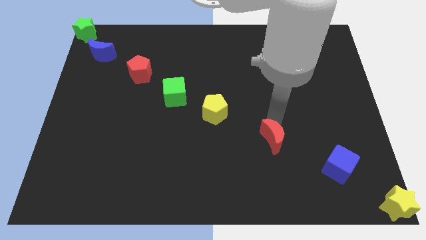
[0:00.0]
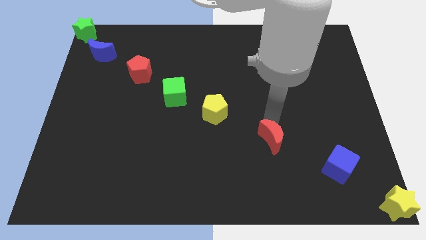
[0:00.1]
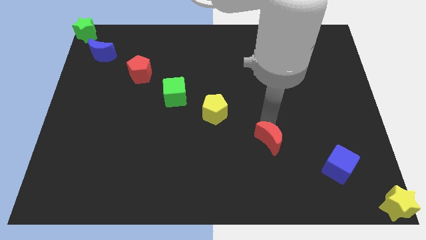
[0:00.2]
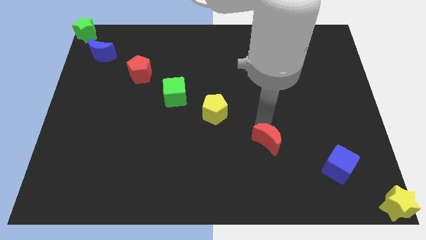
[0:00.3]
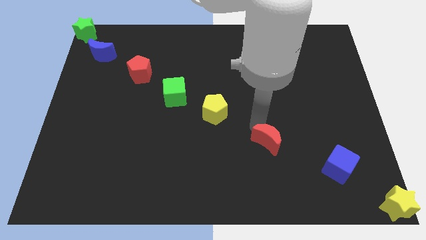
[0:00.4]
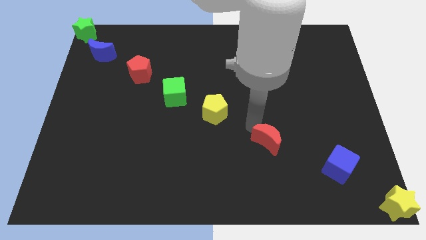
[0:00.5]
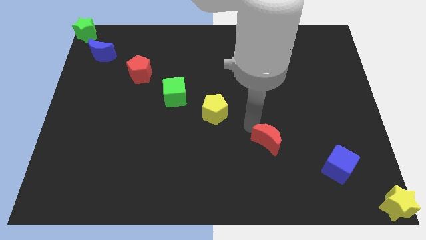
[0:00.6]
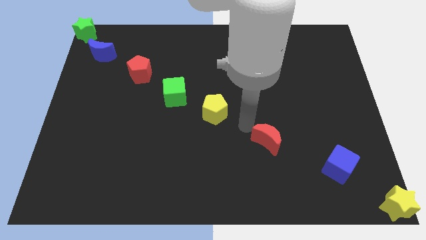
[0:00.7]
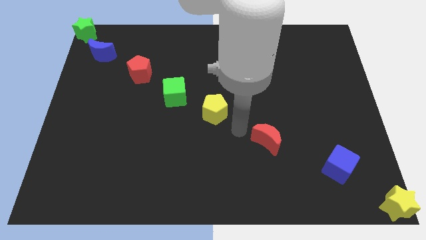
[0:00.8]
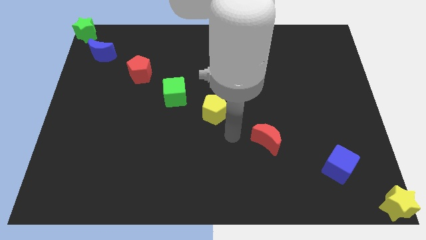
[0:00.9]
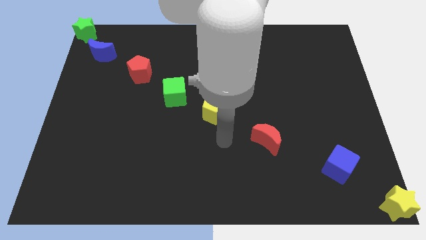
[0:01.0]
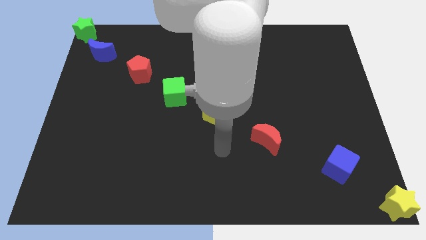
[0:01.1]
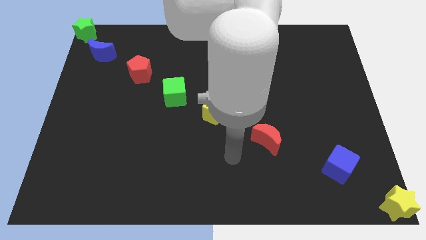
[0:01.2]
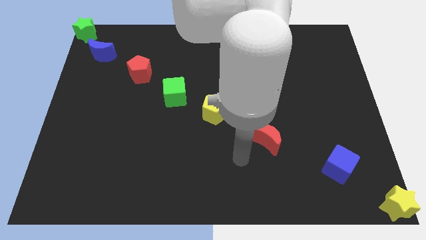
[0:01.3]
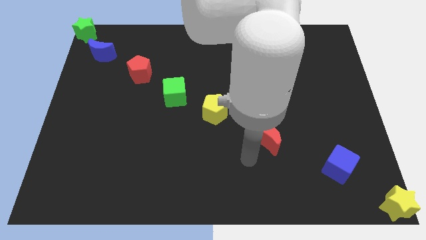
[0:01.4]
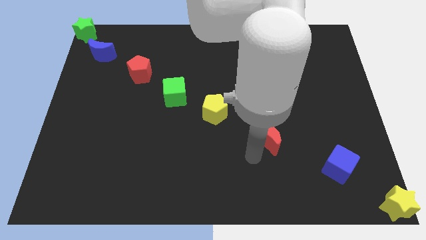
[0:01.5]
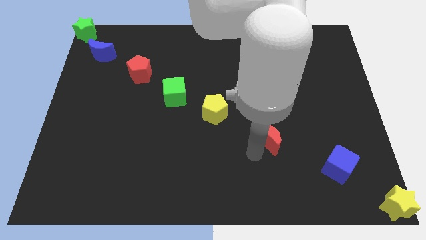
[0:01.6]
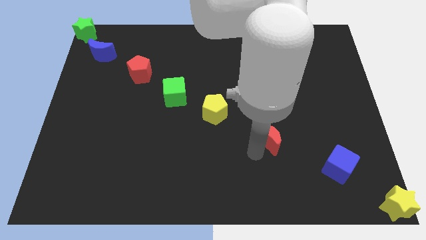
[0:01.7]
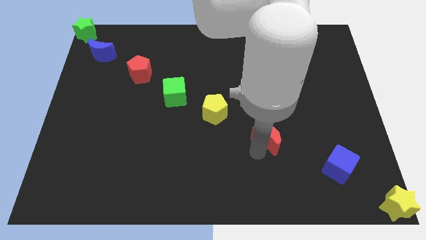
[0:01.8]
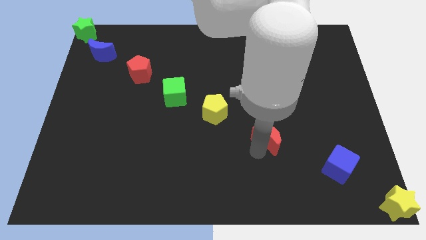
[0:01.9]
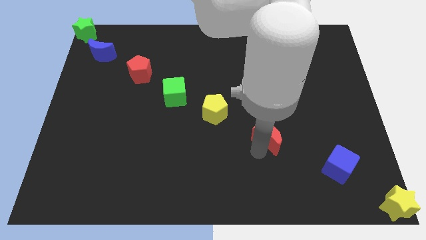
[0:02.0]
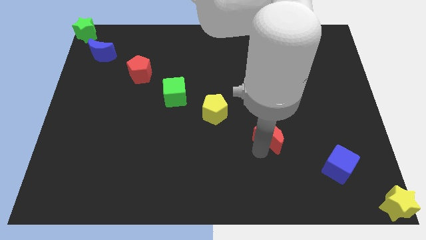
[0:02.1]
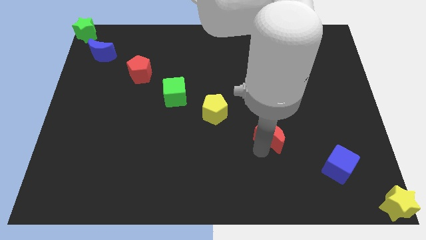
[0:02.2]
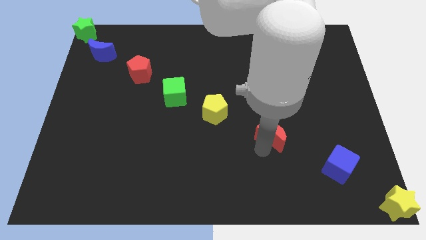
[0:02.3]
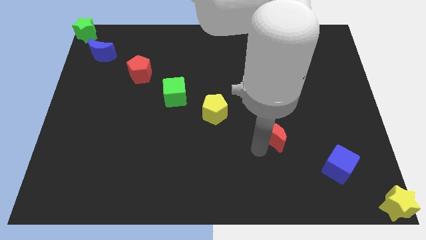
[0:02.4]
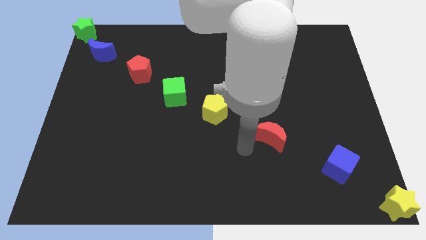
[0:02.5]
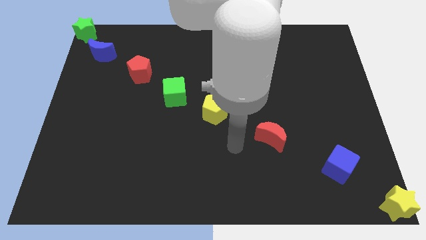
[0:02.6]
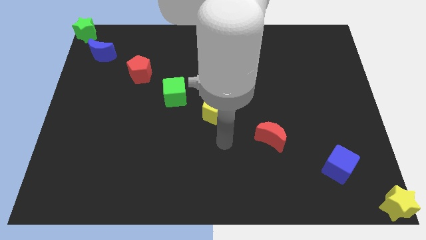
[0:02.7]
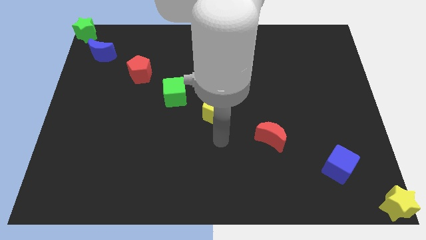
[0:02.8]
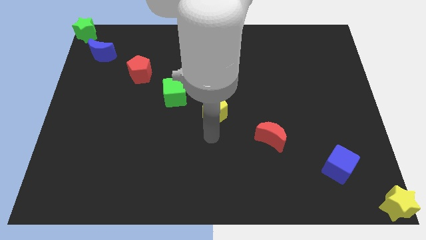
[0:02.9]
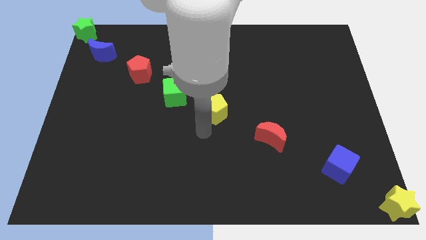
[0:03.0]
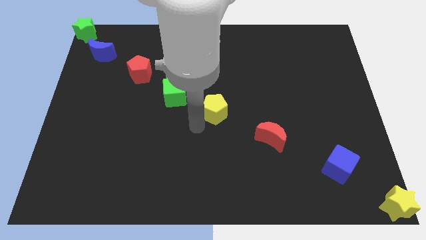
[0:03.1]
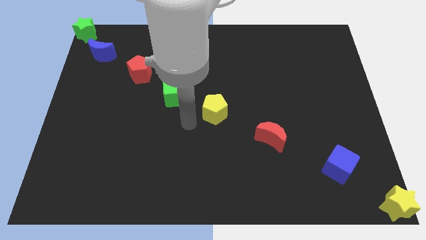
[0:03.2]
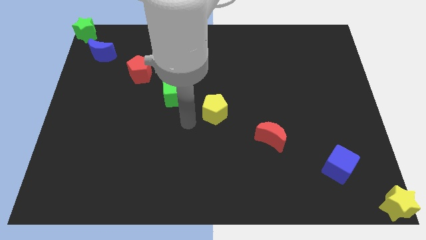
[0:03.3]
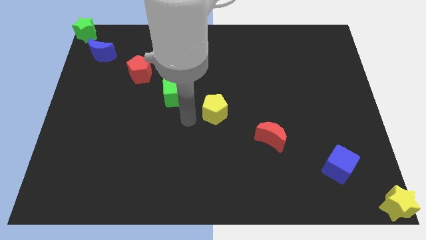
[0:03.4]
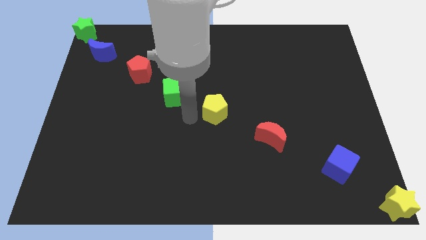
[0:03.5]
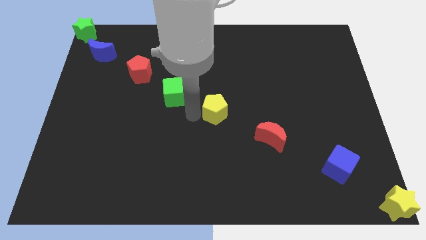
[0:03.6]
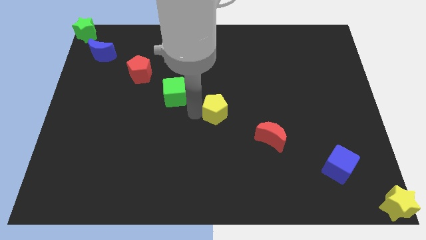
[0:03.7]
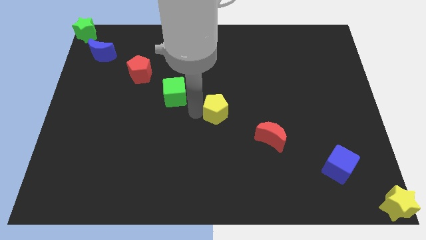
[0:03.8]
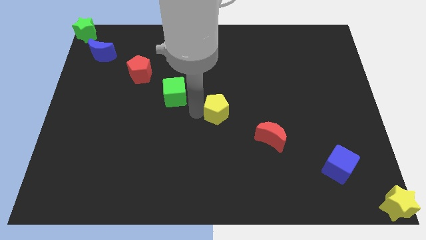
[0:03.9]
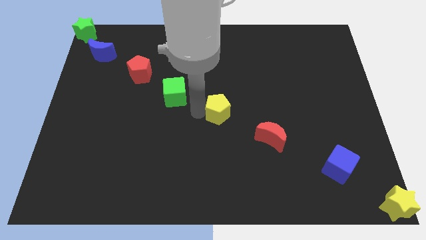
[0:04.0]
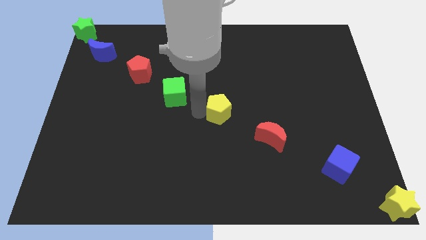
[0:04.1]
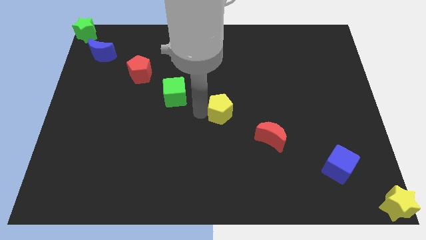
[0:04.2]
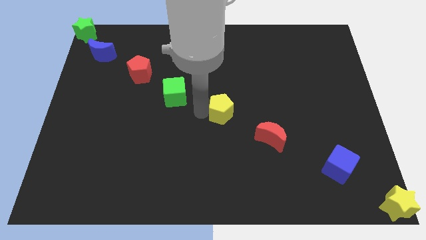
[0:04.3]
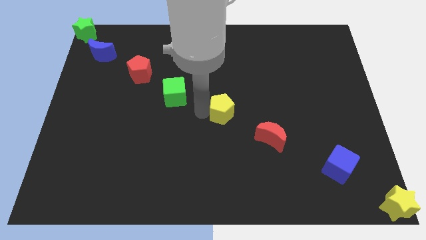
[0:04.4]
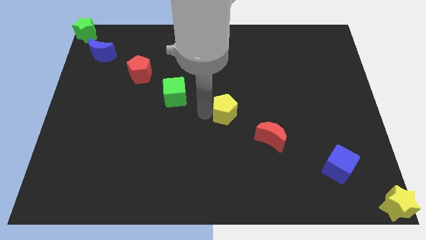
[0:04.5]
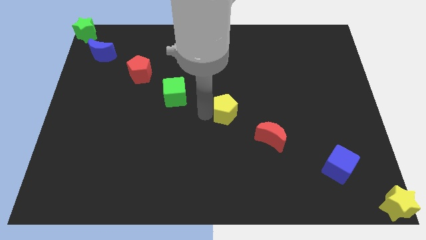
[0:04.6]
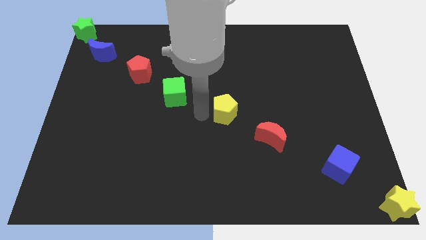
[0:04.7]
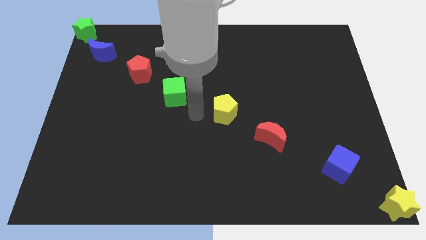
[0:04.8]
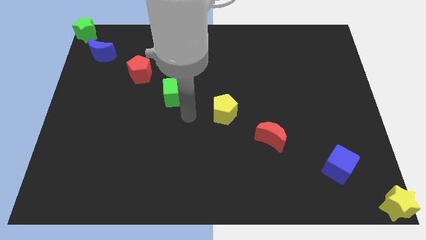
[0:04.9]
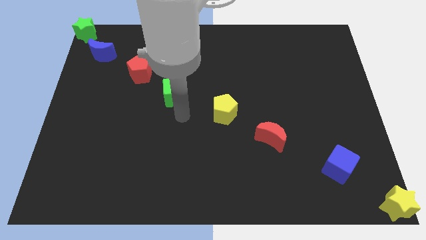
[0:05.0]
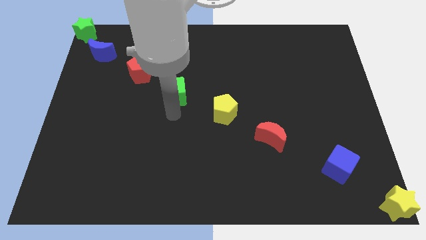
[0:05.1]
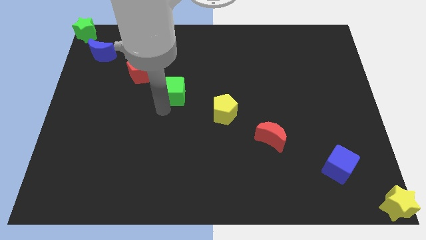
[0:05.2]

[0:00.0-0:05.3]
adjust the red crescent and the yellow pentagon in the diagonal line

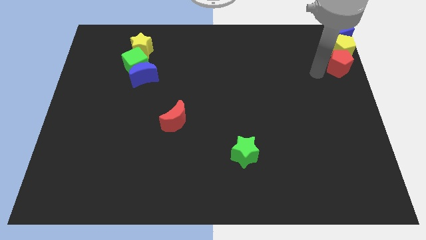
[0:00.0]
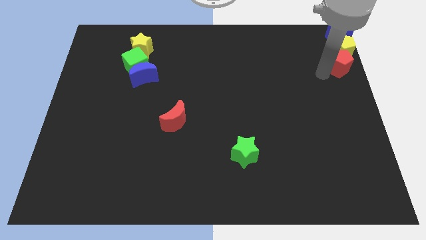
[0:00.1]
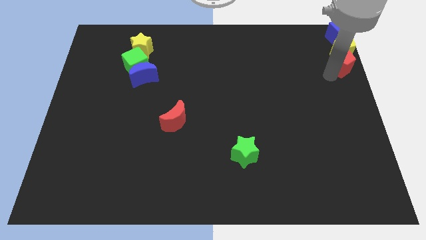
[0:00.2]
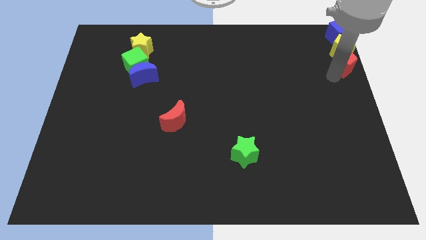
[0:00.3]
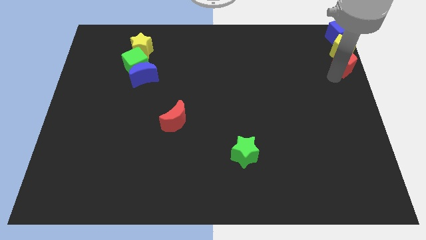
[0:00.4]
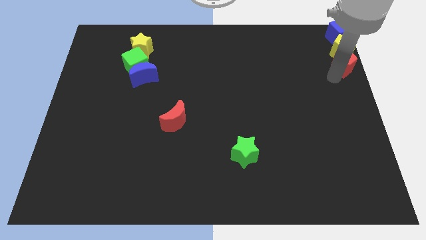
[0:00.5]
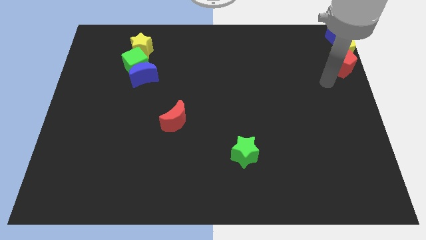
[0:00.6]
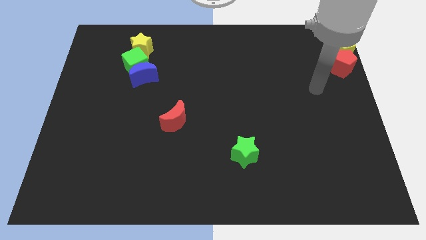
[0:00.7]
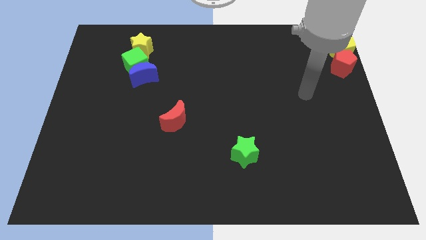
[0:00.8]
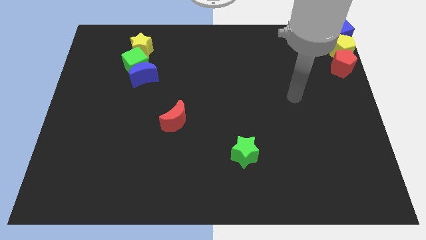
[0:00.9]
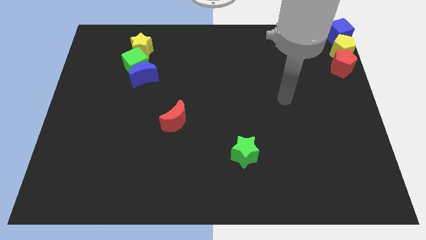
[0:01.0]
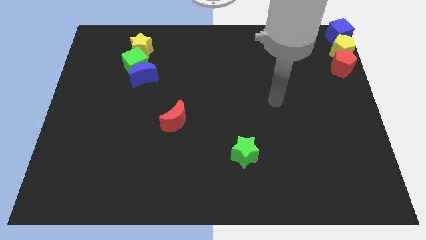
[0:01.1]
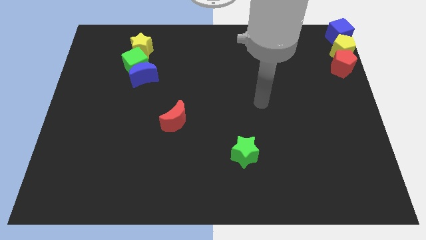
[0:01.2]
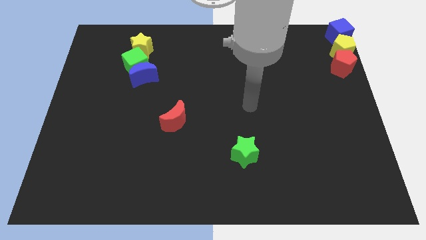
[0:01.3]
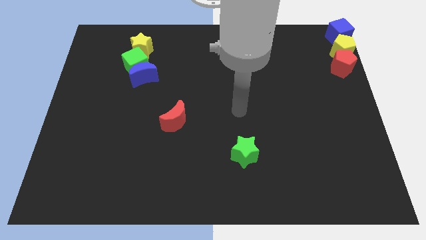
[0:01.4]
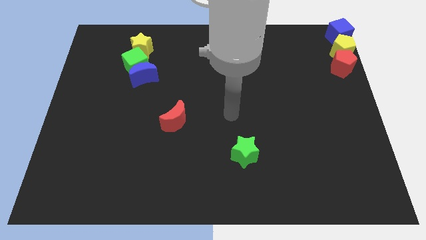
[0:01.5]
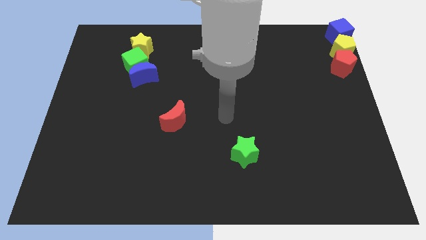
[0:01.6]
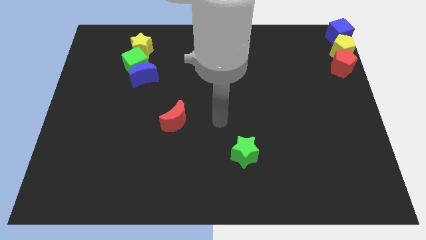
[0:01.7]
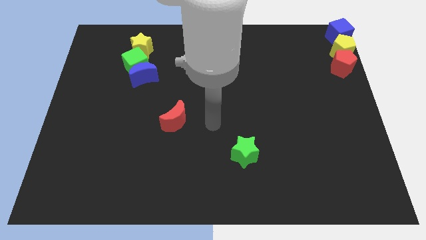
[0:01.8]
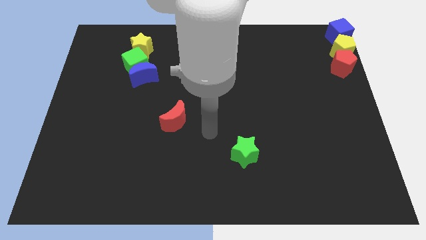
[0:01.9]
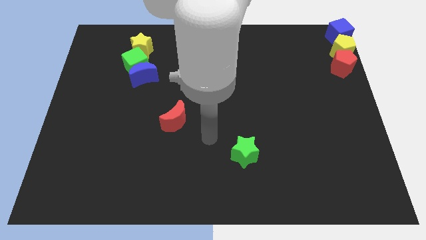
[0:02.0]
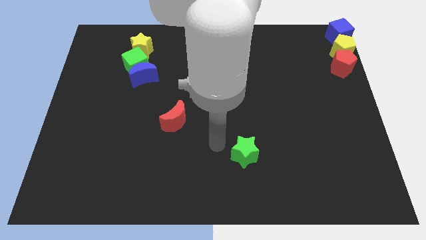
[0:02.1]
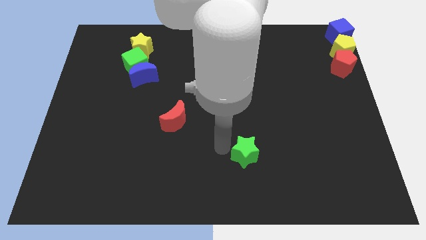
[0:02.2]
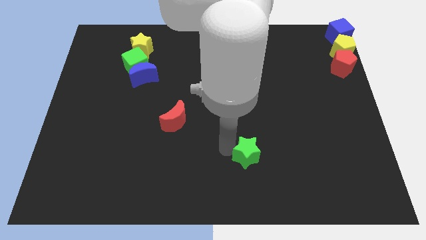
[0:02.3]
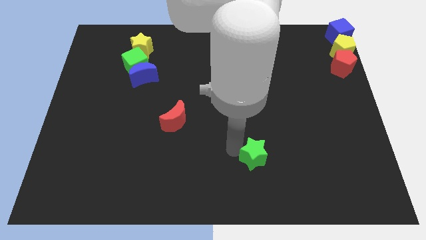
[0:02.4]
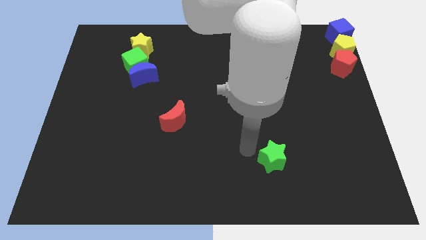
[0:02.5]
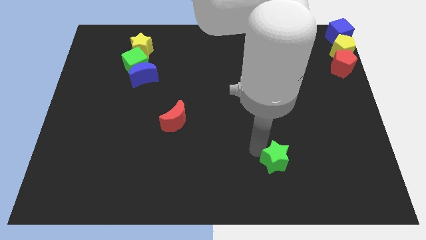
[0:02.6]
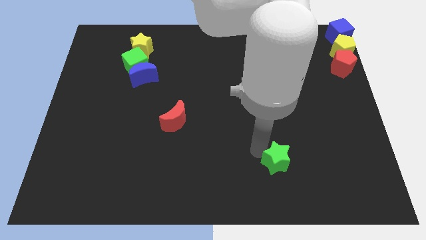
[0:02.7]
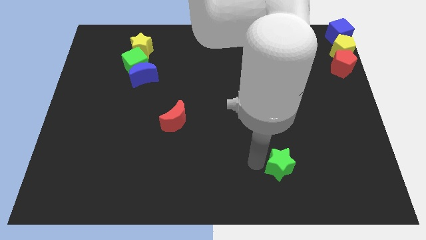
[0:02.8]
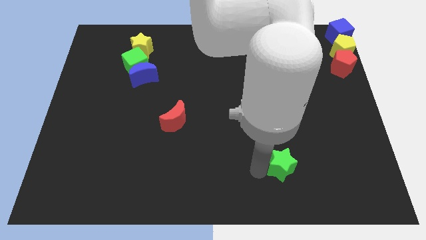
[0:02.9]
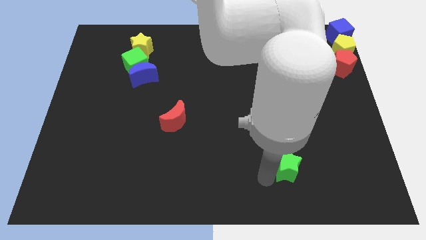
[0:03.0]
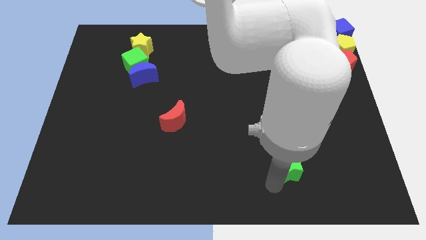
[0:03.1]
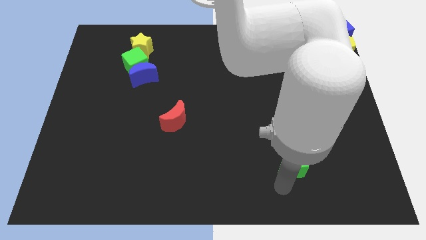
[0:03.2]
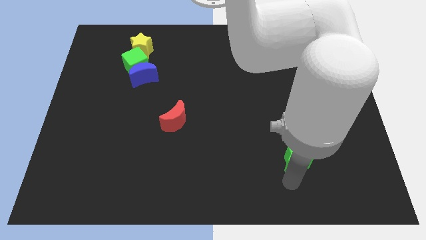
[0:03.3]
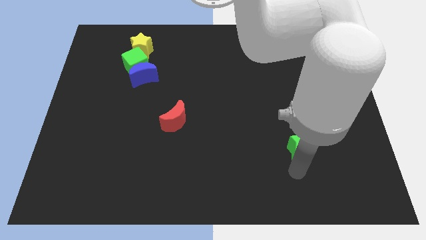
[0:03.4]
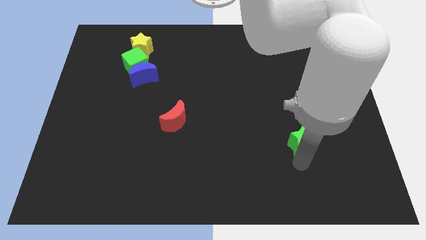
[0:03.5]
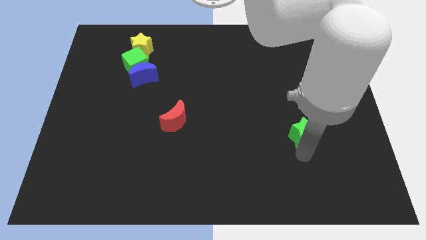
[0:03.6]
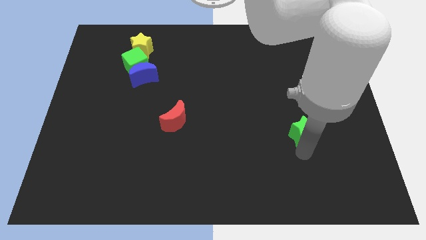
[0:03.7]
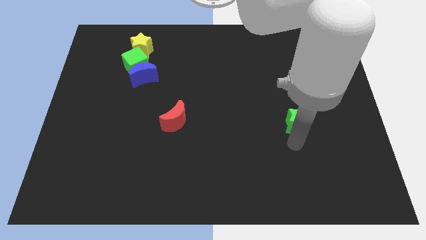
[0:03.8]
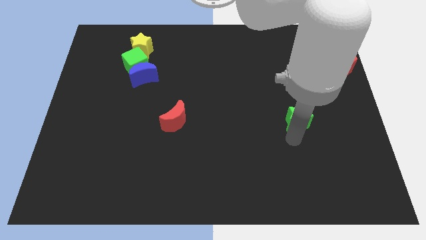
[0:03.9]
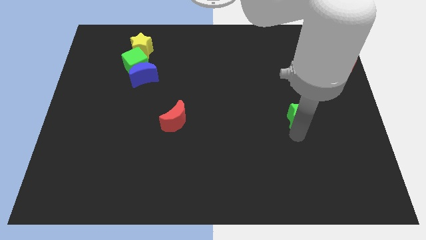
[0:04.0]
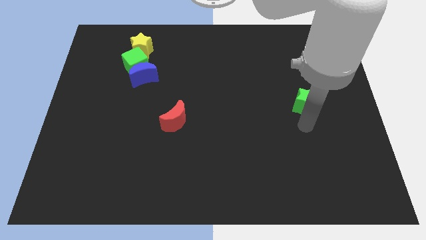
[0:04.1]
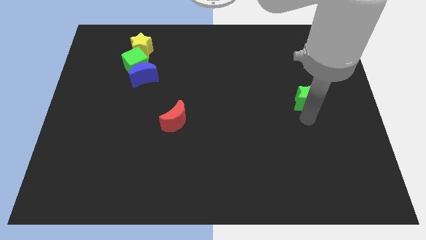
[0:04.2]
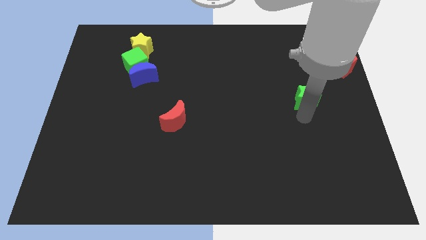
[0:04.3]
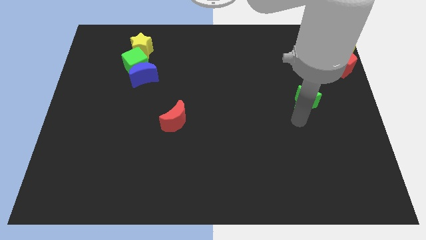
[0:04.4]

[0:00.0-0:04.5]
push the green star towards the red pentagon
